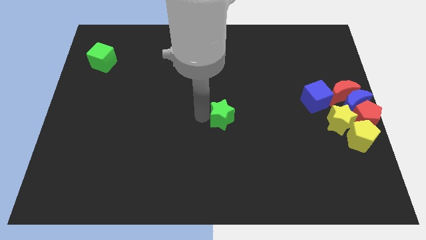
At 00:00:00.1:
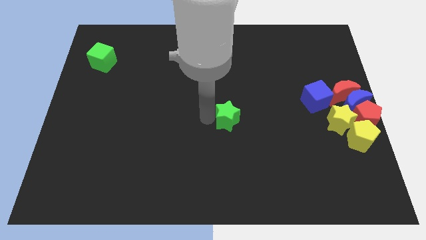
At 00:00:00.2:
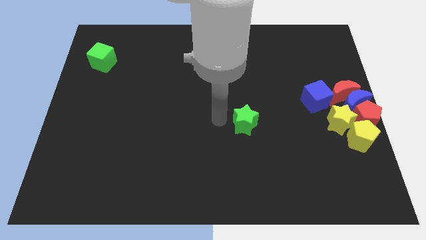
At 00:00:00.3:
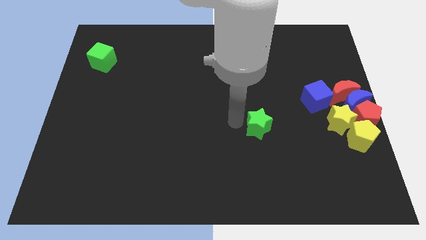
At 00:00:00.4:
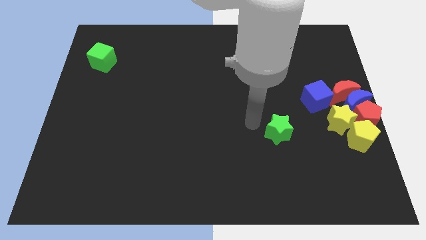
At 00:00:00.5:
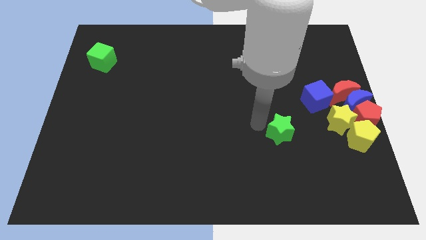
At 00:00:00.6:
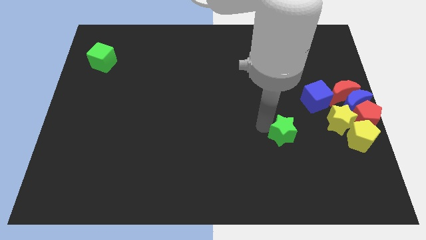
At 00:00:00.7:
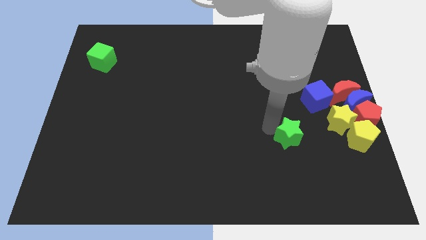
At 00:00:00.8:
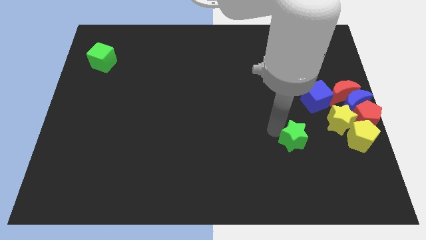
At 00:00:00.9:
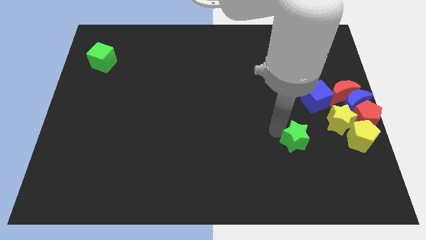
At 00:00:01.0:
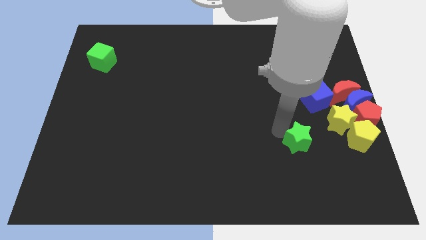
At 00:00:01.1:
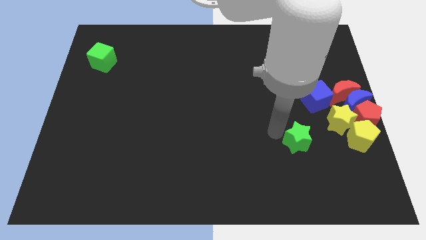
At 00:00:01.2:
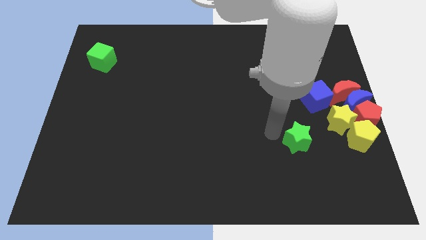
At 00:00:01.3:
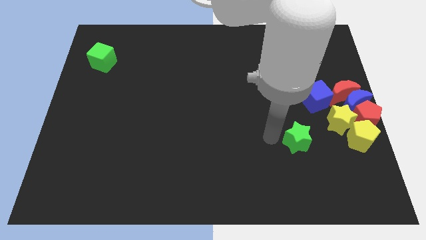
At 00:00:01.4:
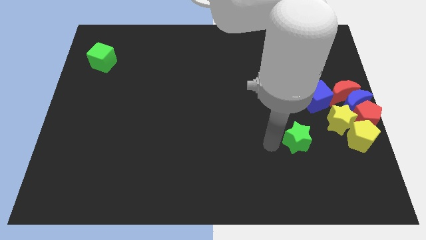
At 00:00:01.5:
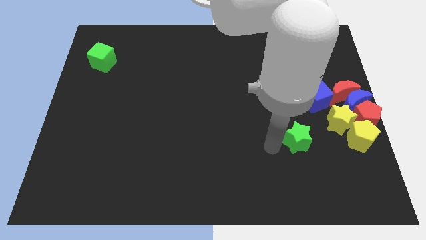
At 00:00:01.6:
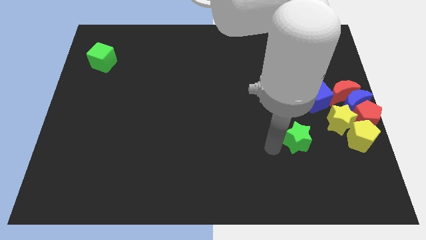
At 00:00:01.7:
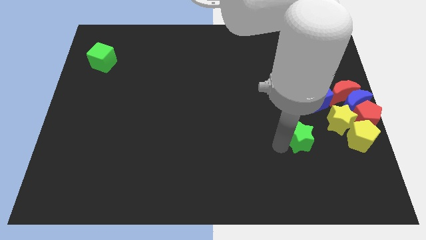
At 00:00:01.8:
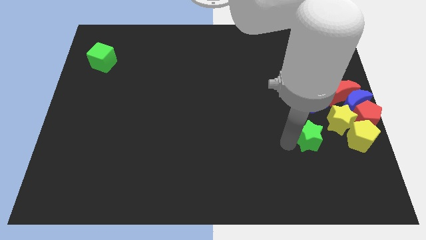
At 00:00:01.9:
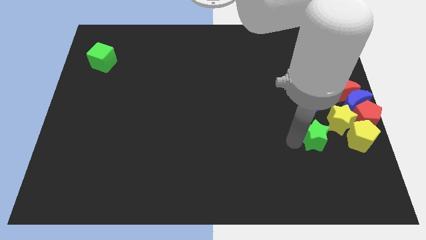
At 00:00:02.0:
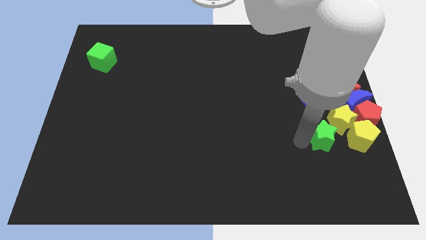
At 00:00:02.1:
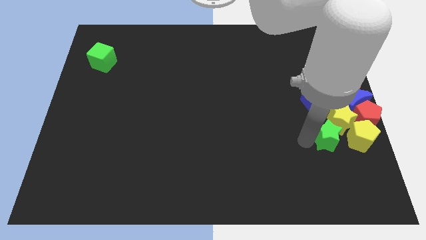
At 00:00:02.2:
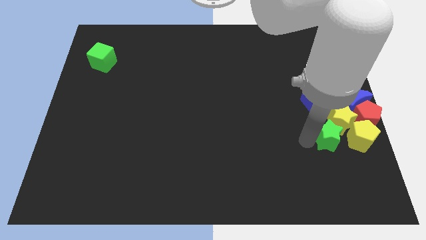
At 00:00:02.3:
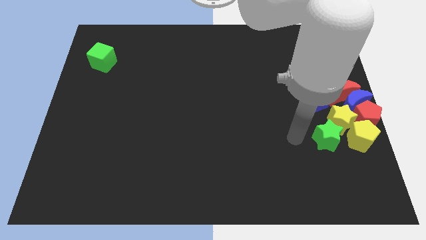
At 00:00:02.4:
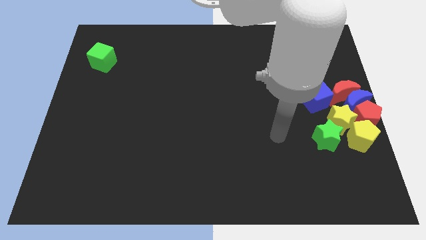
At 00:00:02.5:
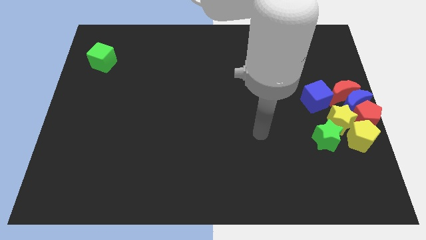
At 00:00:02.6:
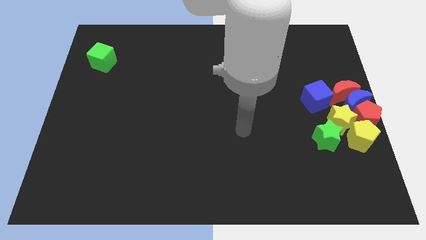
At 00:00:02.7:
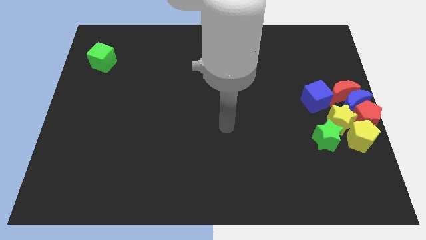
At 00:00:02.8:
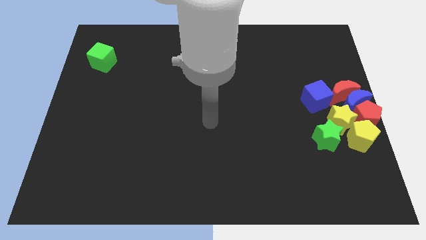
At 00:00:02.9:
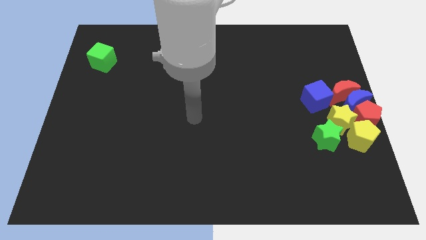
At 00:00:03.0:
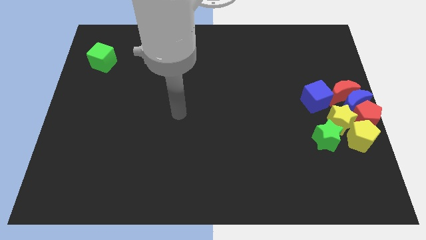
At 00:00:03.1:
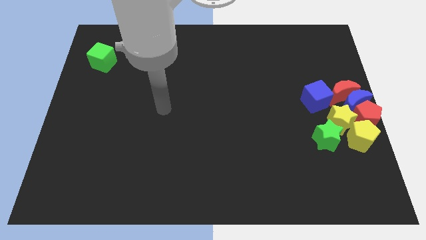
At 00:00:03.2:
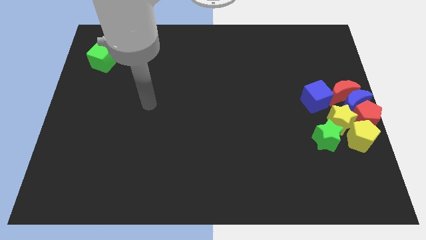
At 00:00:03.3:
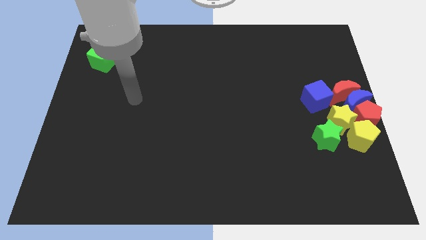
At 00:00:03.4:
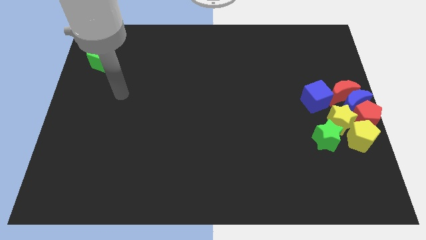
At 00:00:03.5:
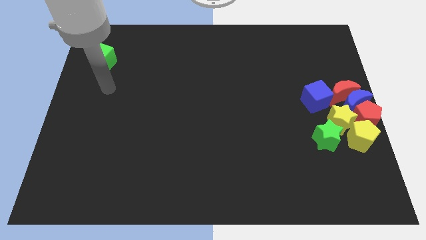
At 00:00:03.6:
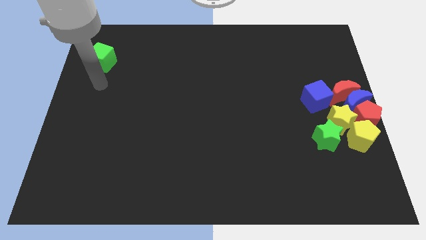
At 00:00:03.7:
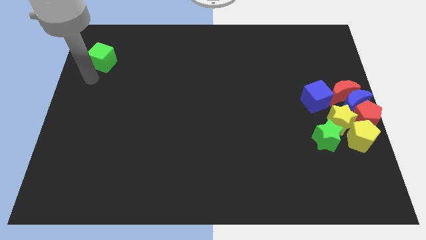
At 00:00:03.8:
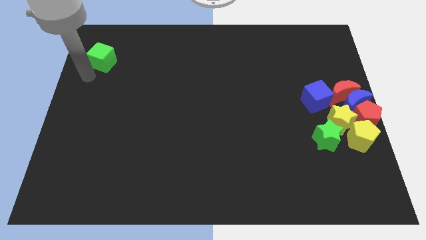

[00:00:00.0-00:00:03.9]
place your arm below the green cube

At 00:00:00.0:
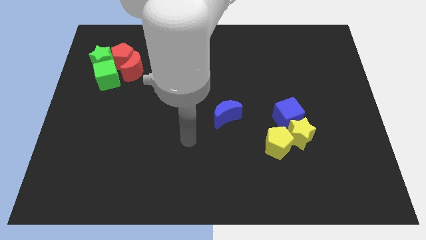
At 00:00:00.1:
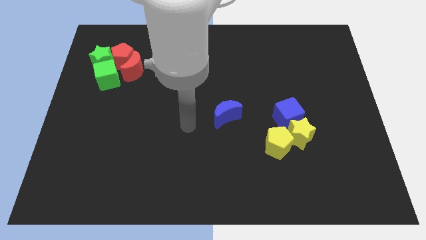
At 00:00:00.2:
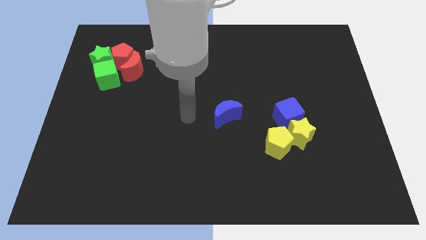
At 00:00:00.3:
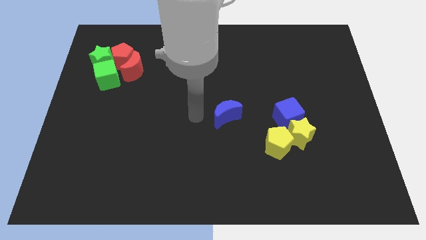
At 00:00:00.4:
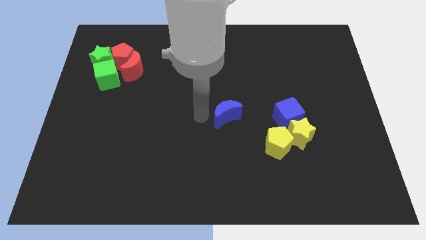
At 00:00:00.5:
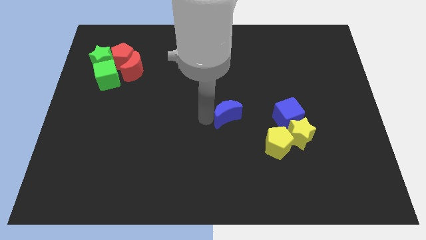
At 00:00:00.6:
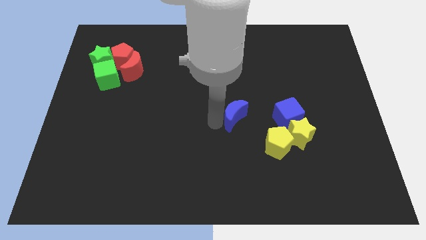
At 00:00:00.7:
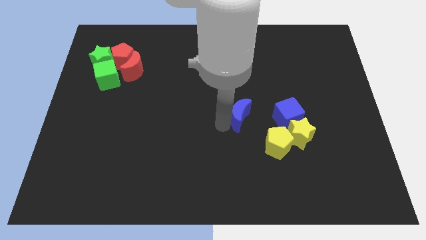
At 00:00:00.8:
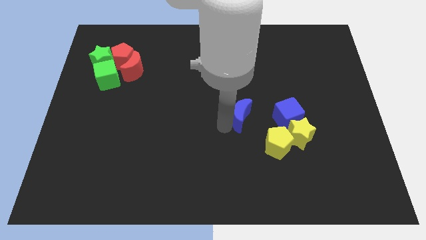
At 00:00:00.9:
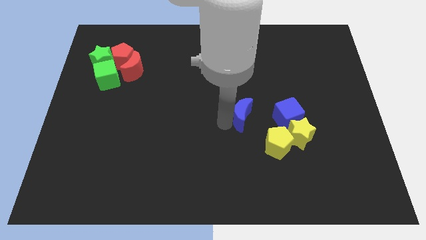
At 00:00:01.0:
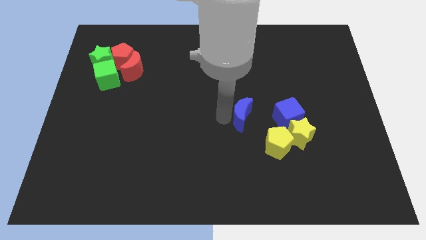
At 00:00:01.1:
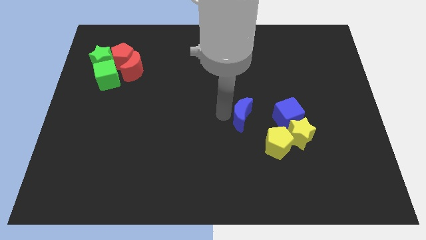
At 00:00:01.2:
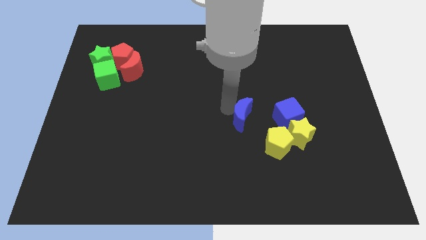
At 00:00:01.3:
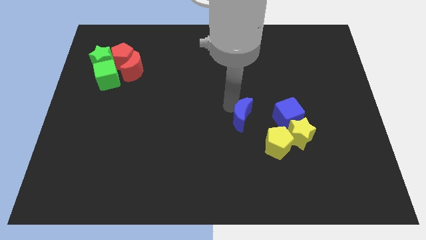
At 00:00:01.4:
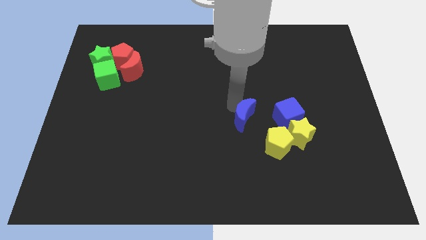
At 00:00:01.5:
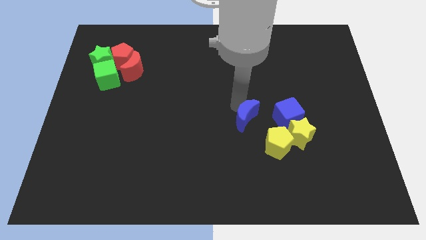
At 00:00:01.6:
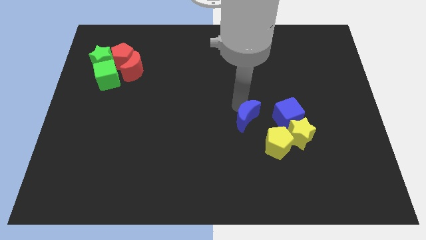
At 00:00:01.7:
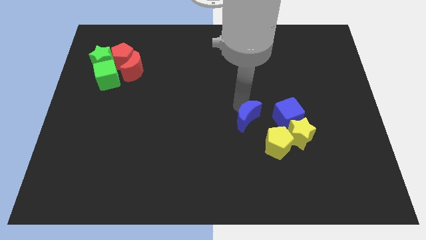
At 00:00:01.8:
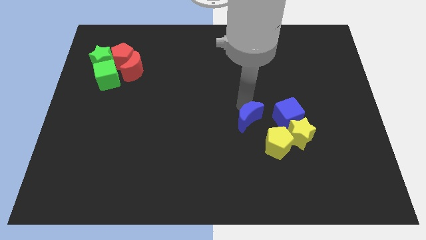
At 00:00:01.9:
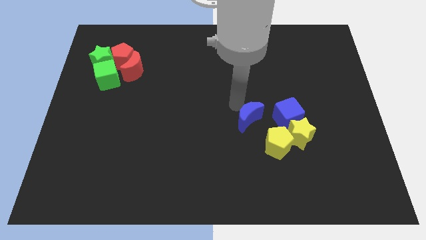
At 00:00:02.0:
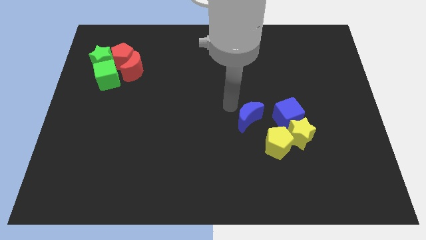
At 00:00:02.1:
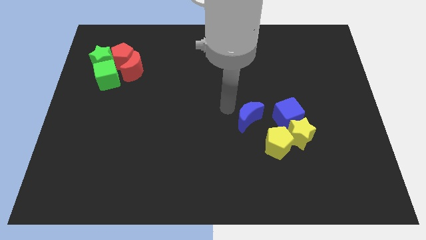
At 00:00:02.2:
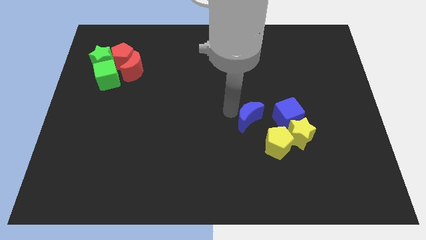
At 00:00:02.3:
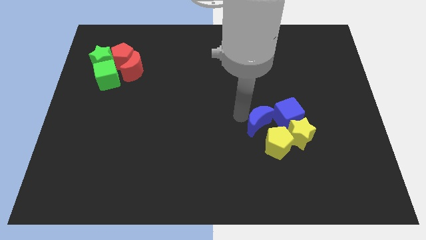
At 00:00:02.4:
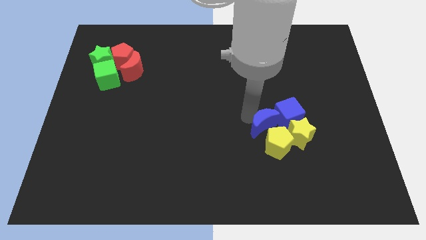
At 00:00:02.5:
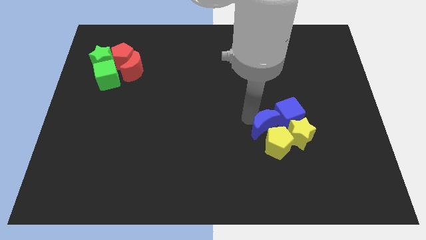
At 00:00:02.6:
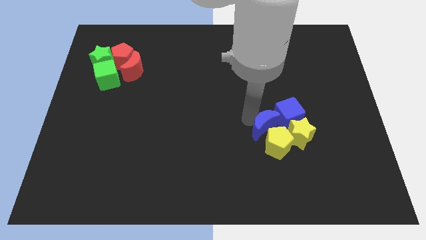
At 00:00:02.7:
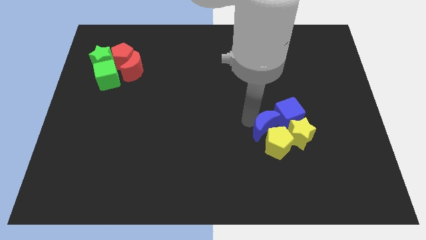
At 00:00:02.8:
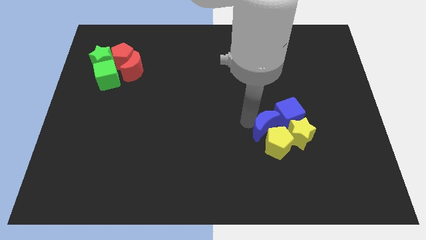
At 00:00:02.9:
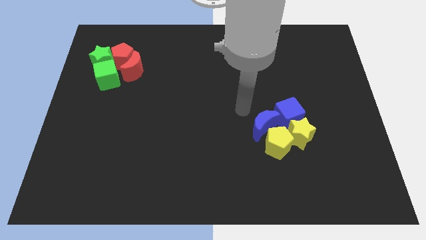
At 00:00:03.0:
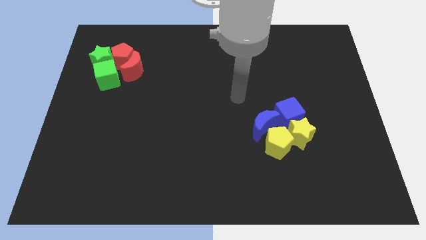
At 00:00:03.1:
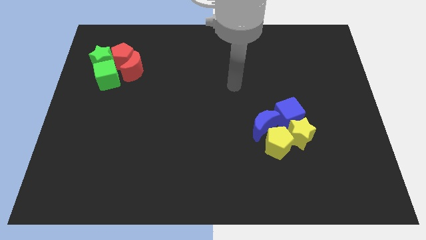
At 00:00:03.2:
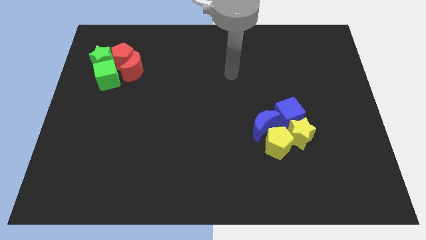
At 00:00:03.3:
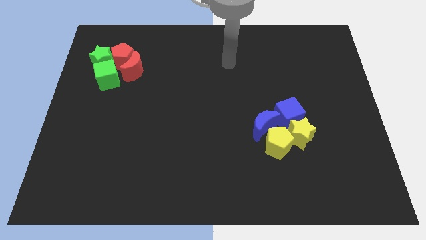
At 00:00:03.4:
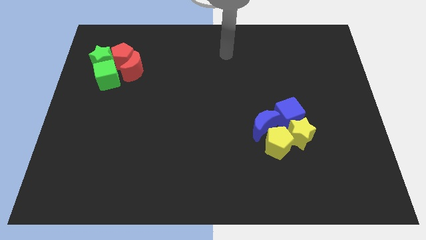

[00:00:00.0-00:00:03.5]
move the blue crescent into the blue cube

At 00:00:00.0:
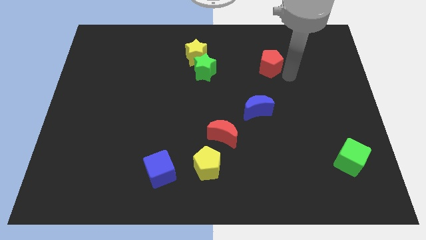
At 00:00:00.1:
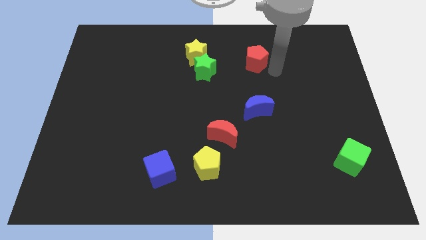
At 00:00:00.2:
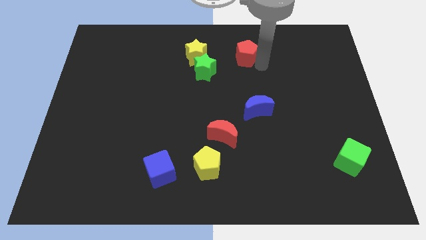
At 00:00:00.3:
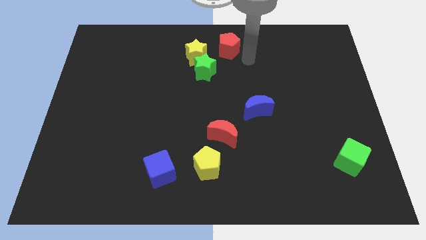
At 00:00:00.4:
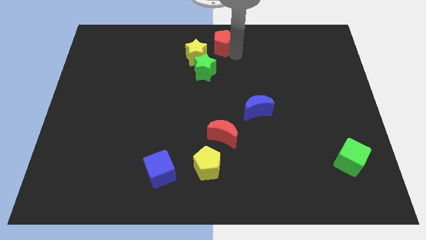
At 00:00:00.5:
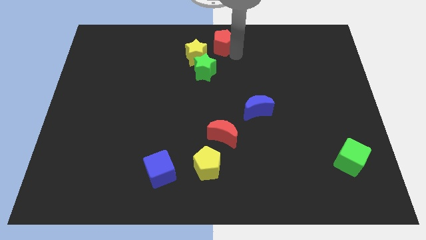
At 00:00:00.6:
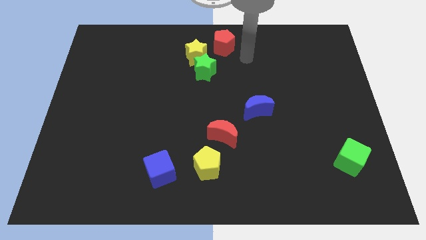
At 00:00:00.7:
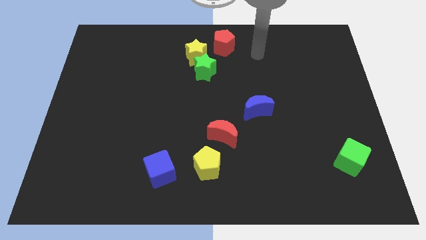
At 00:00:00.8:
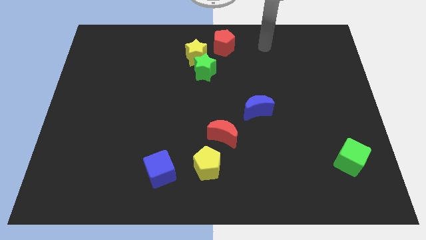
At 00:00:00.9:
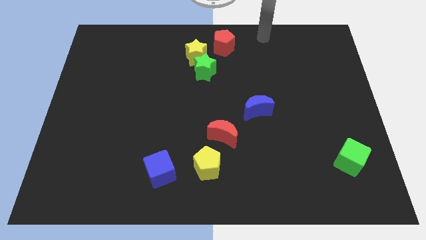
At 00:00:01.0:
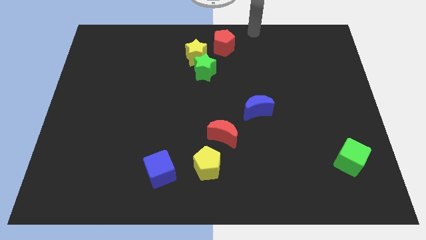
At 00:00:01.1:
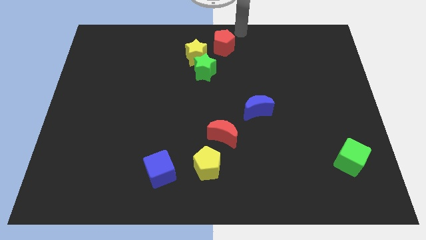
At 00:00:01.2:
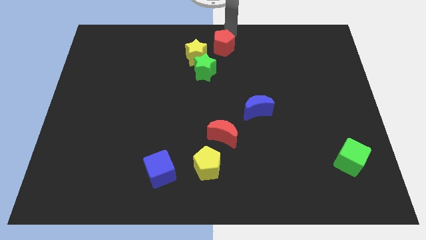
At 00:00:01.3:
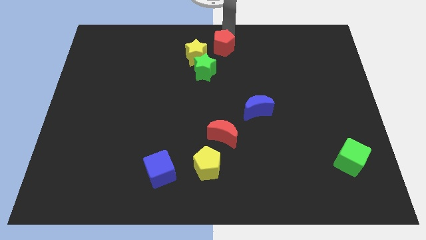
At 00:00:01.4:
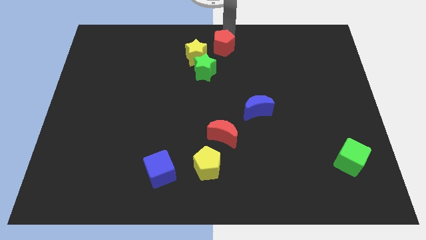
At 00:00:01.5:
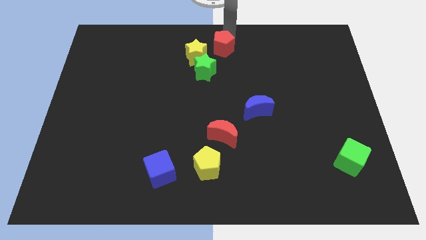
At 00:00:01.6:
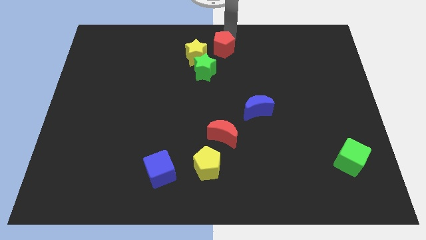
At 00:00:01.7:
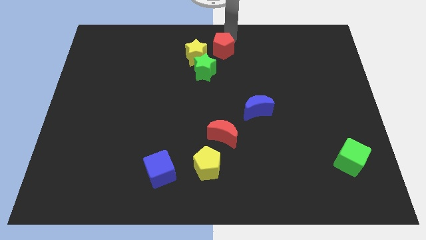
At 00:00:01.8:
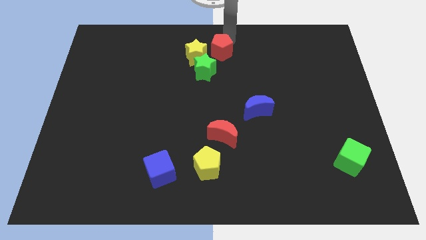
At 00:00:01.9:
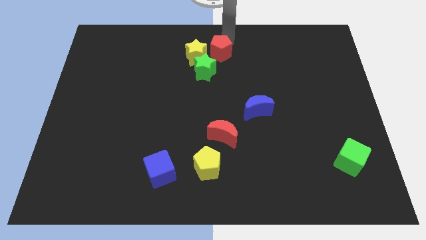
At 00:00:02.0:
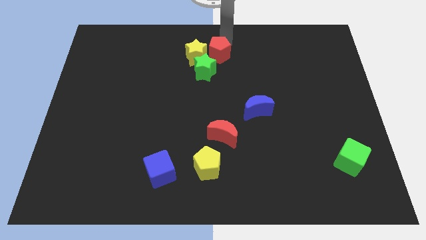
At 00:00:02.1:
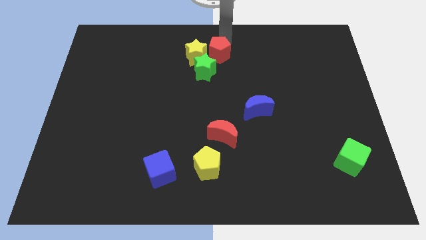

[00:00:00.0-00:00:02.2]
push the red pentagon to top right of green star
